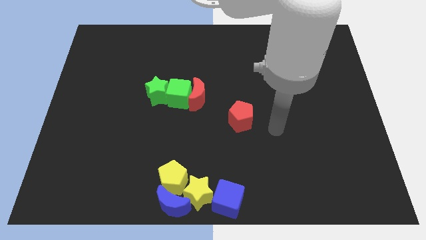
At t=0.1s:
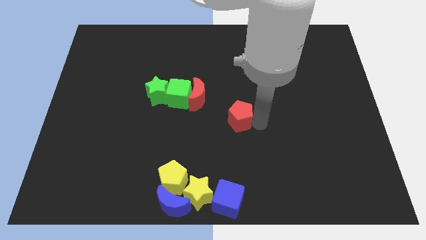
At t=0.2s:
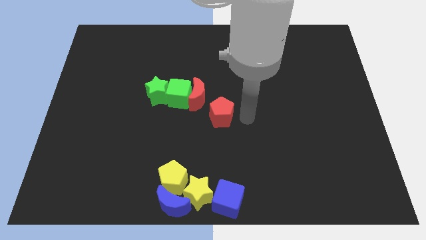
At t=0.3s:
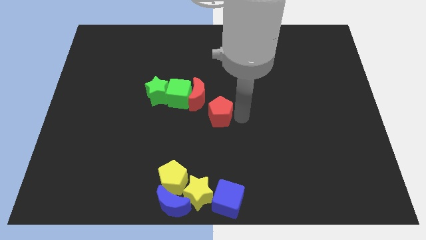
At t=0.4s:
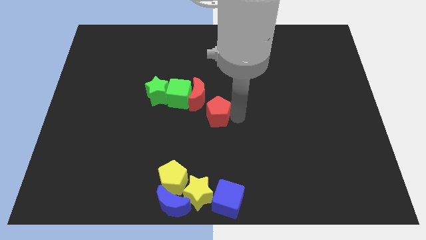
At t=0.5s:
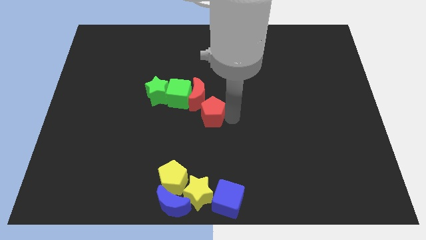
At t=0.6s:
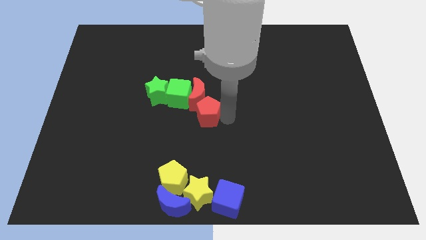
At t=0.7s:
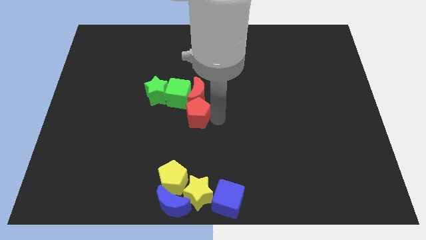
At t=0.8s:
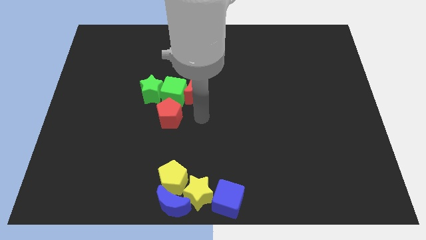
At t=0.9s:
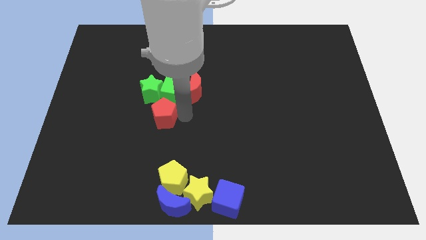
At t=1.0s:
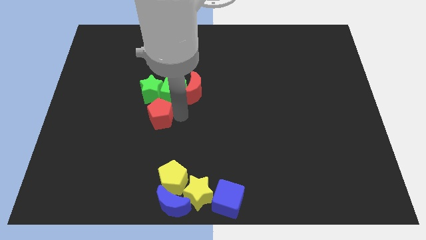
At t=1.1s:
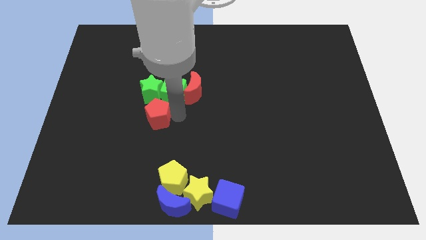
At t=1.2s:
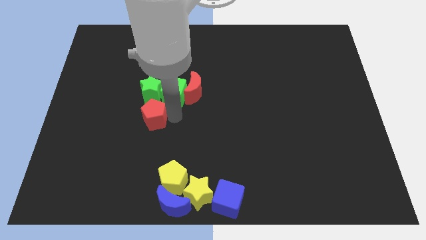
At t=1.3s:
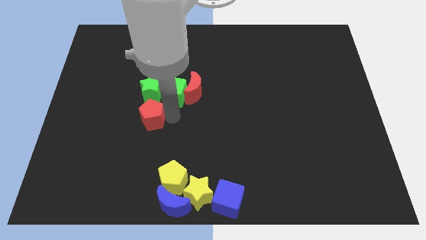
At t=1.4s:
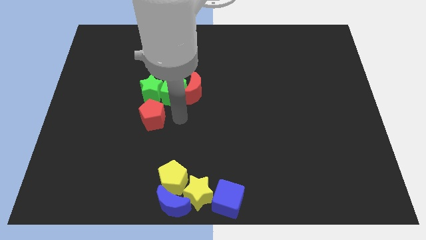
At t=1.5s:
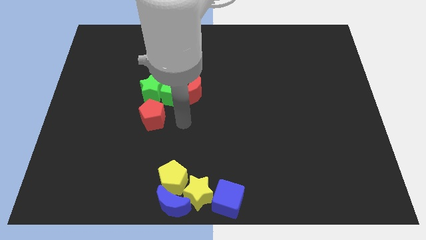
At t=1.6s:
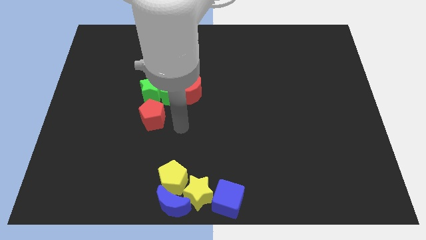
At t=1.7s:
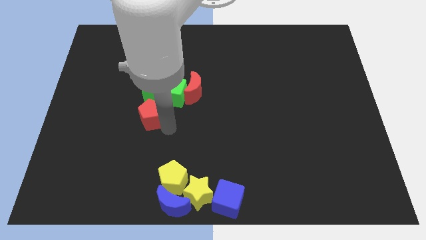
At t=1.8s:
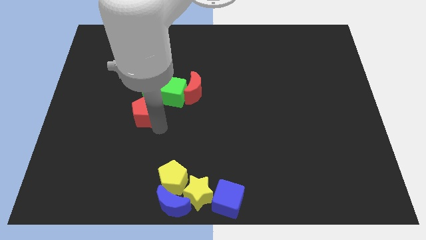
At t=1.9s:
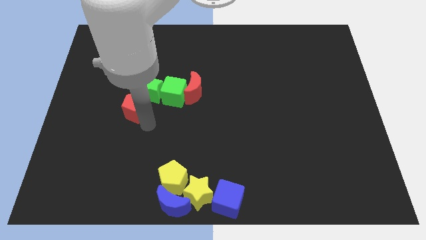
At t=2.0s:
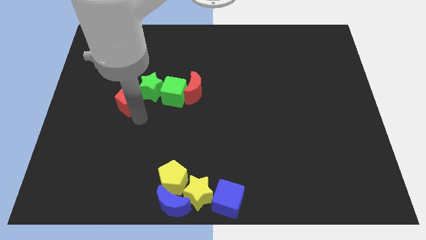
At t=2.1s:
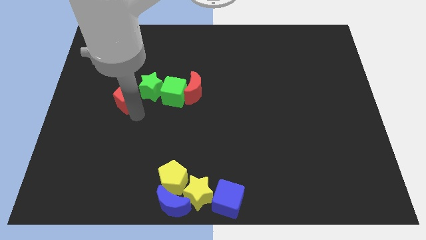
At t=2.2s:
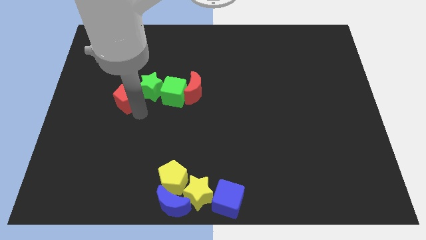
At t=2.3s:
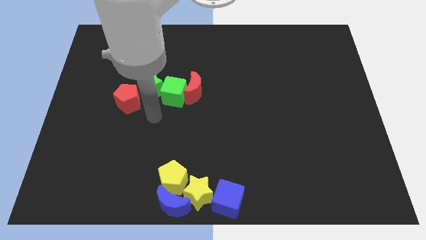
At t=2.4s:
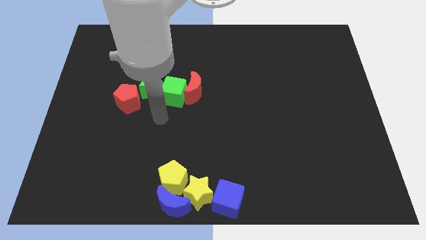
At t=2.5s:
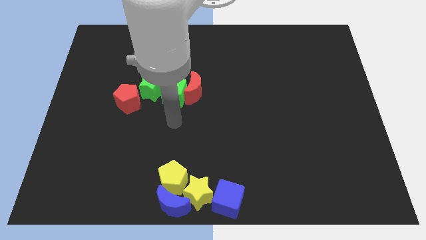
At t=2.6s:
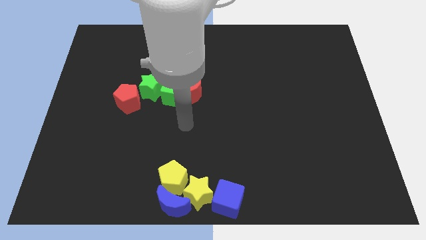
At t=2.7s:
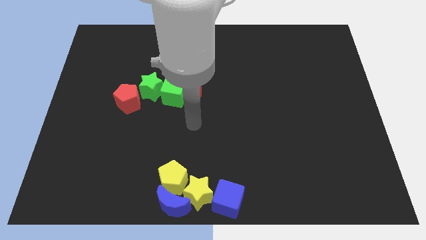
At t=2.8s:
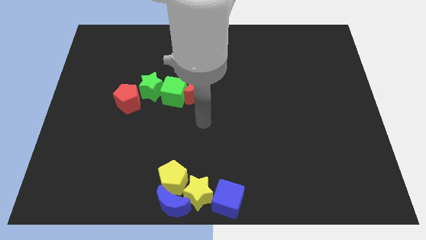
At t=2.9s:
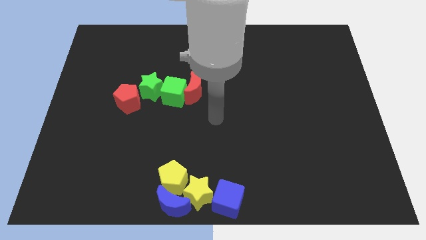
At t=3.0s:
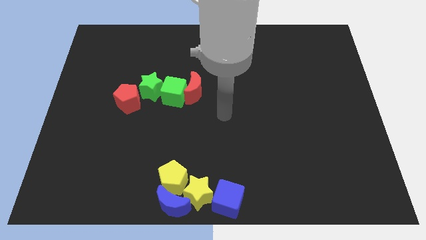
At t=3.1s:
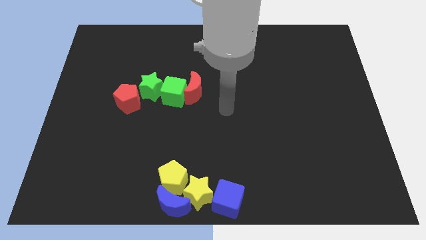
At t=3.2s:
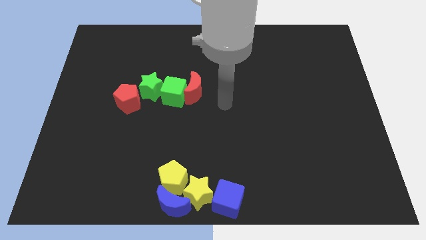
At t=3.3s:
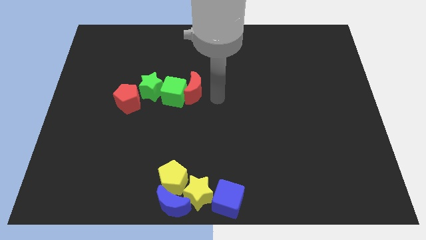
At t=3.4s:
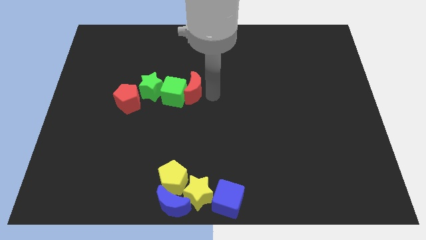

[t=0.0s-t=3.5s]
push the red pentagon to the bottom left of the green star

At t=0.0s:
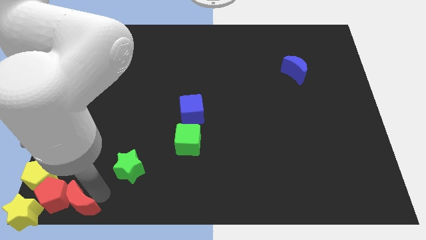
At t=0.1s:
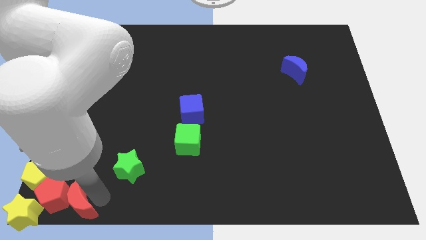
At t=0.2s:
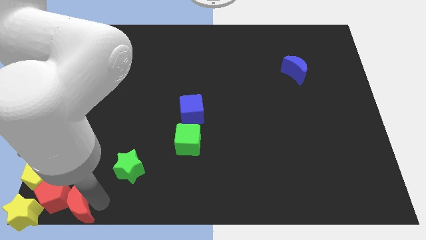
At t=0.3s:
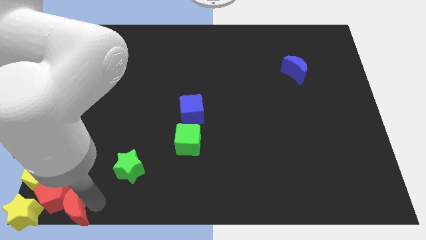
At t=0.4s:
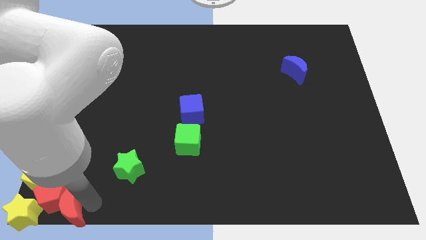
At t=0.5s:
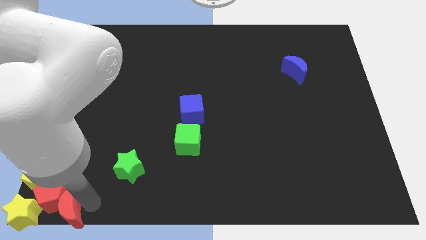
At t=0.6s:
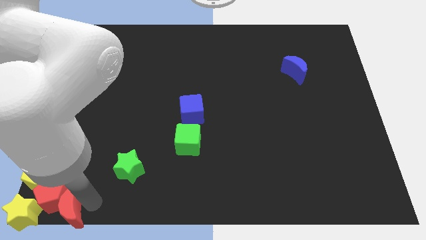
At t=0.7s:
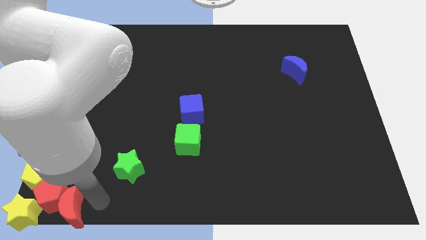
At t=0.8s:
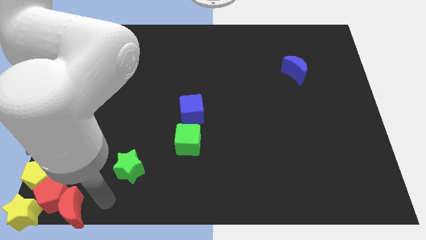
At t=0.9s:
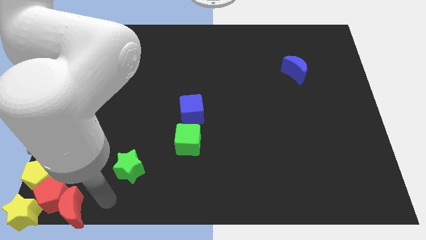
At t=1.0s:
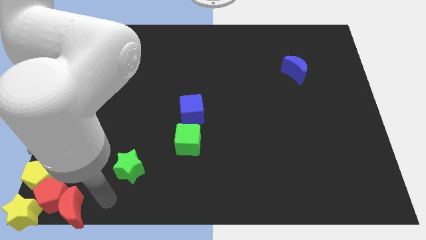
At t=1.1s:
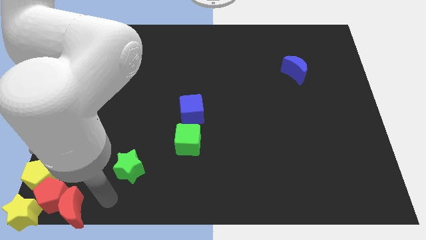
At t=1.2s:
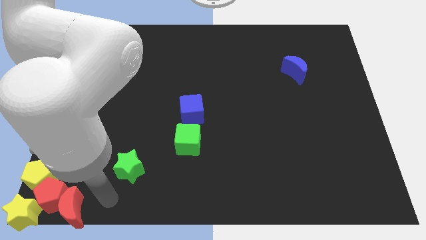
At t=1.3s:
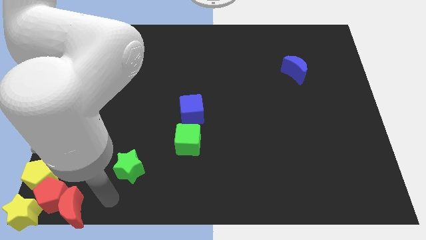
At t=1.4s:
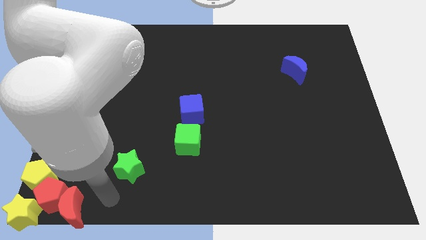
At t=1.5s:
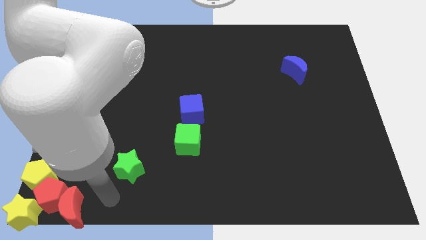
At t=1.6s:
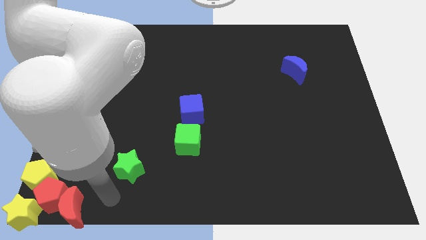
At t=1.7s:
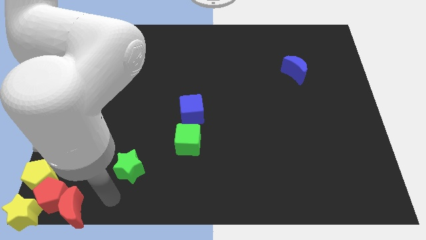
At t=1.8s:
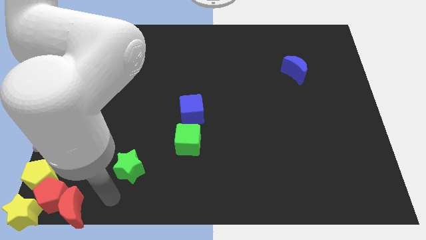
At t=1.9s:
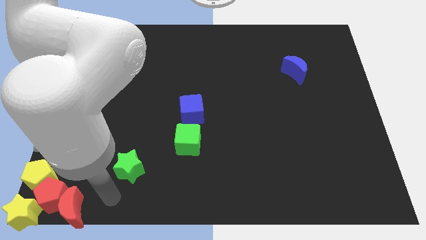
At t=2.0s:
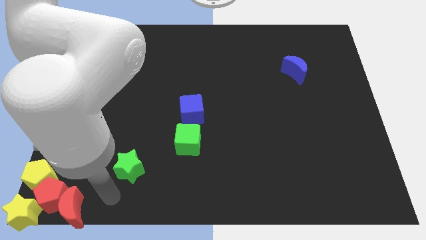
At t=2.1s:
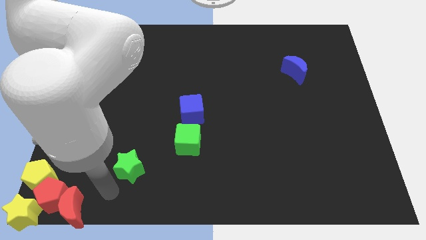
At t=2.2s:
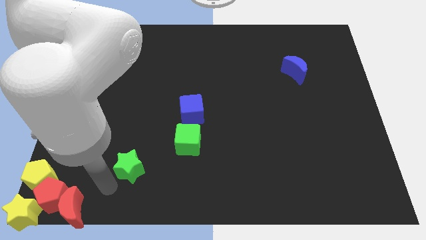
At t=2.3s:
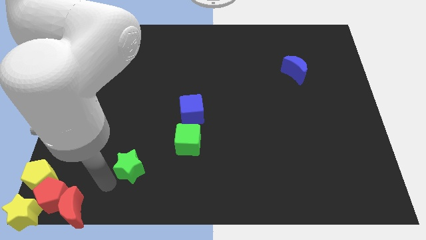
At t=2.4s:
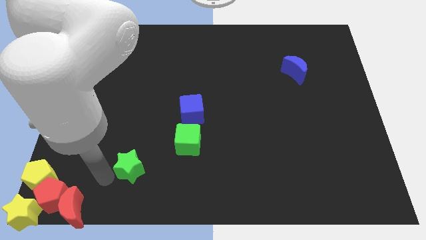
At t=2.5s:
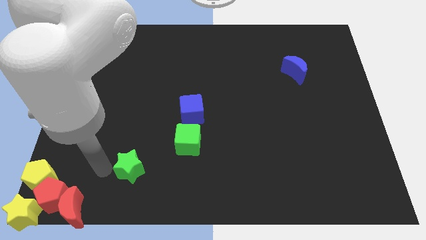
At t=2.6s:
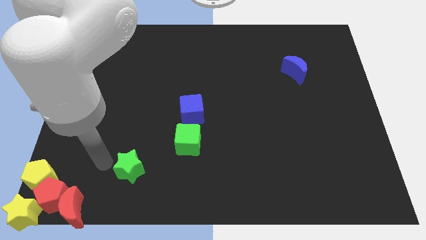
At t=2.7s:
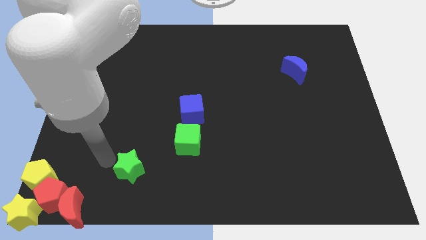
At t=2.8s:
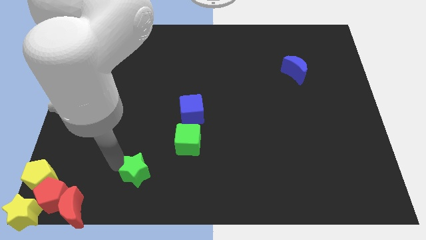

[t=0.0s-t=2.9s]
place the arm near the green star

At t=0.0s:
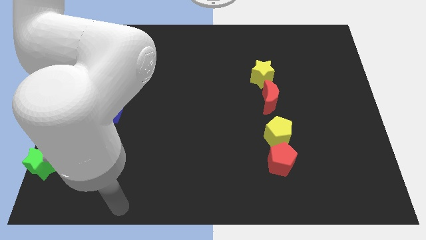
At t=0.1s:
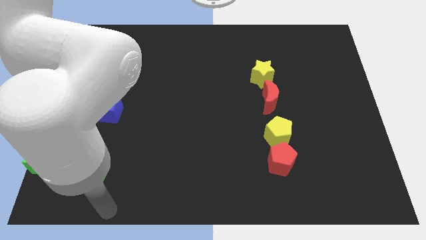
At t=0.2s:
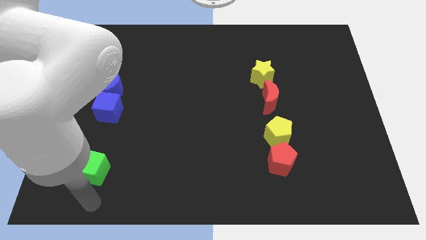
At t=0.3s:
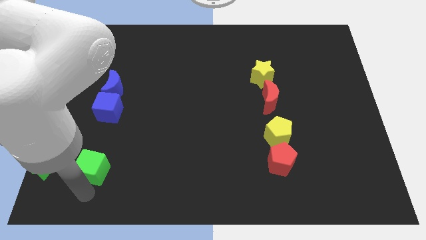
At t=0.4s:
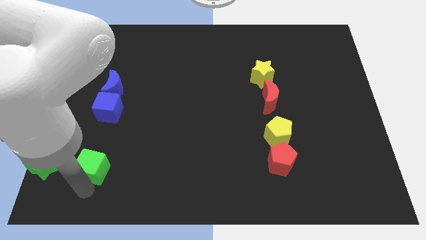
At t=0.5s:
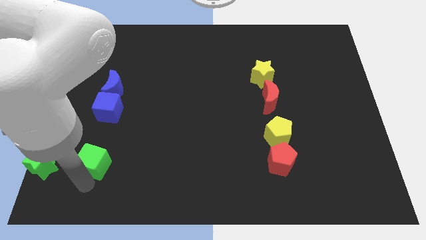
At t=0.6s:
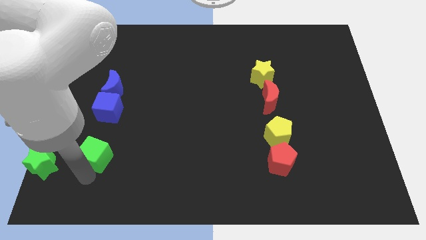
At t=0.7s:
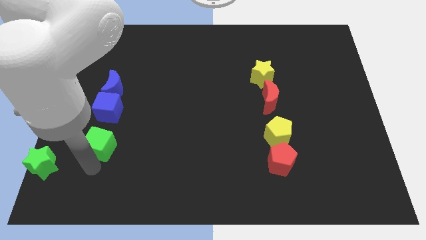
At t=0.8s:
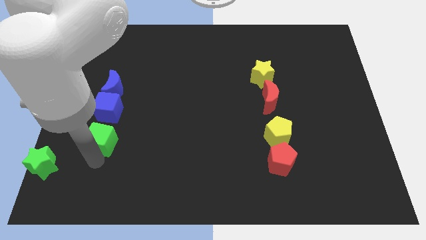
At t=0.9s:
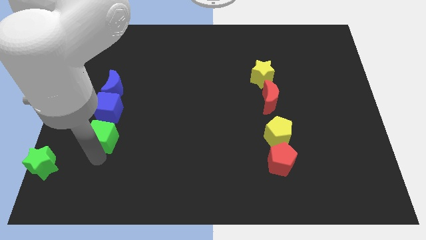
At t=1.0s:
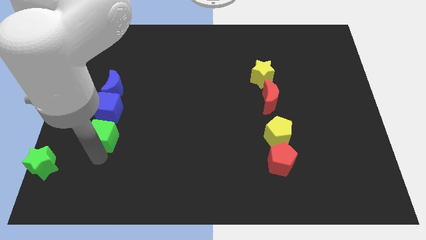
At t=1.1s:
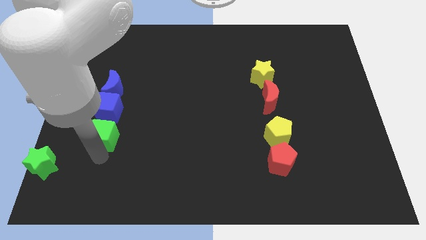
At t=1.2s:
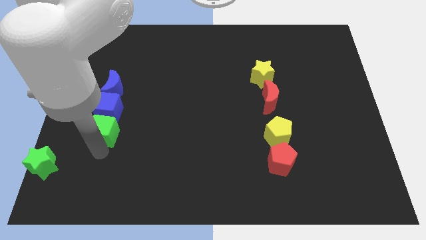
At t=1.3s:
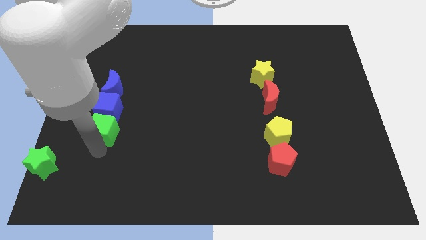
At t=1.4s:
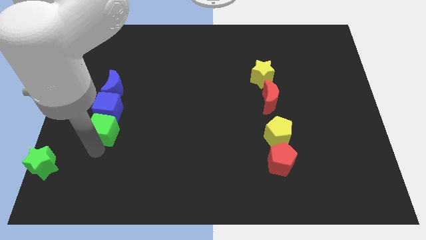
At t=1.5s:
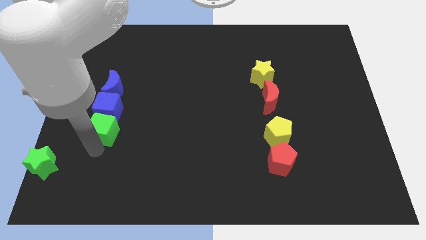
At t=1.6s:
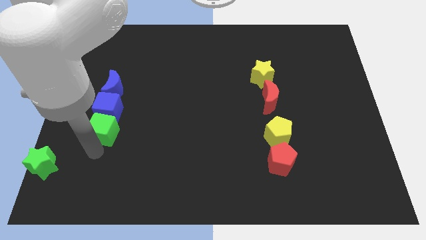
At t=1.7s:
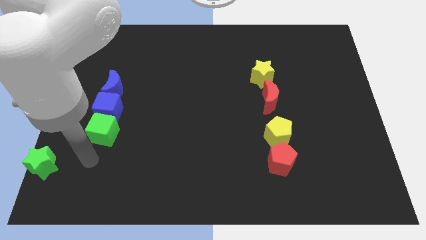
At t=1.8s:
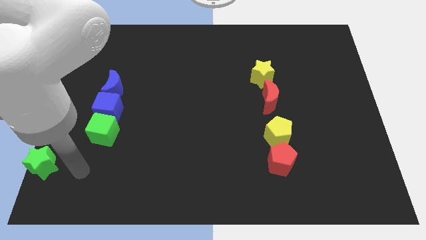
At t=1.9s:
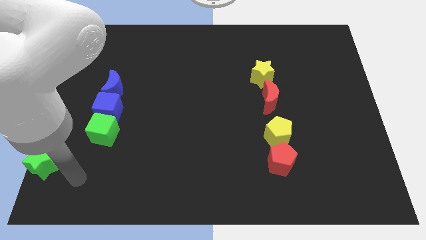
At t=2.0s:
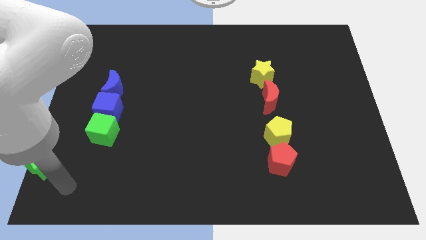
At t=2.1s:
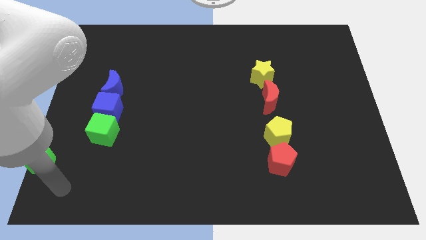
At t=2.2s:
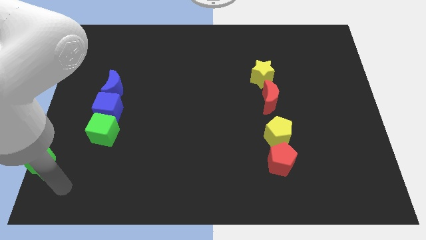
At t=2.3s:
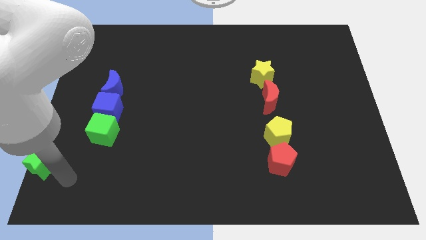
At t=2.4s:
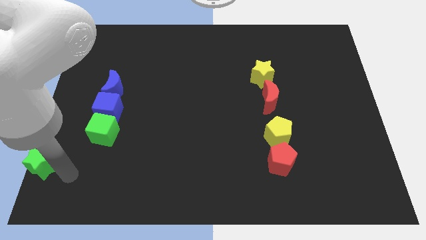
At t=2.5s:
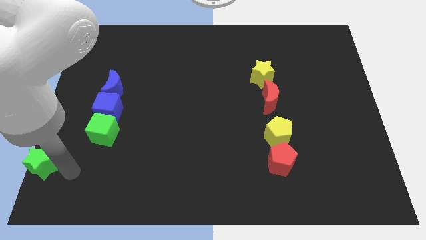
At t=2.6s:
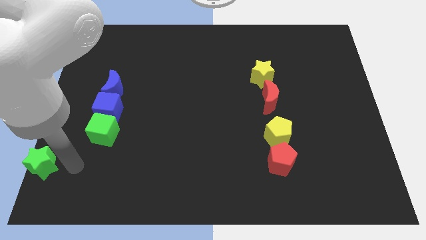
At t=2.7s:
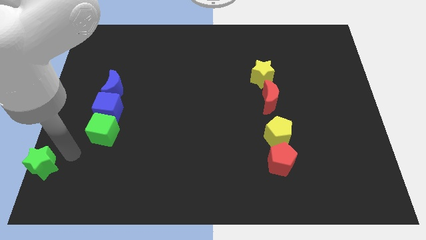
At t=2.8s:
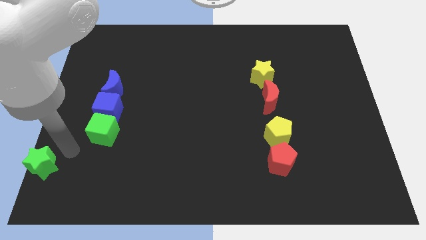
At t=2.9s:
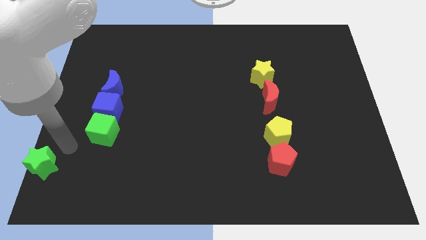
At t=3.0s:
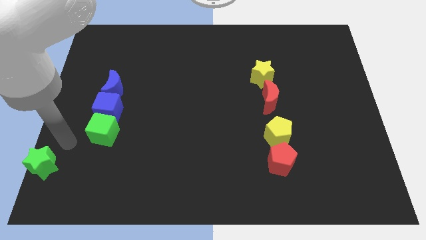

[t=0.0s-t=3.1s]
move the green cube to the bottom of blue cube
